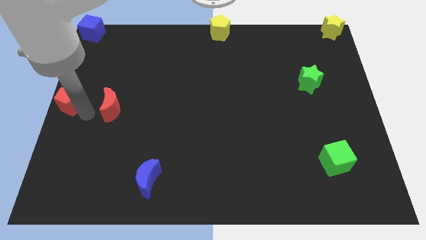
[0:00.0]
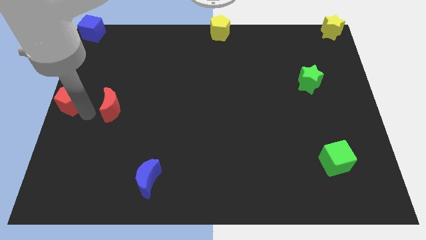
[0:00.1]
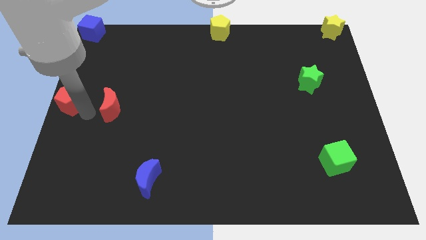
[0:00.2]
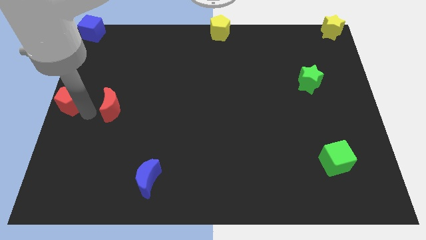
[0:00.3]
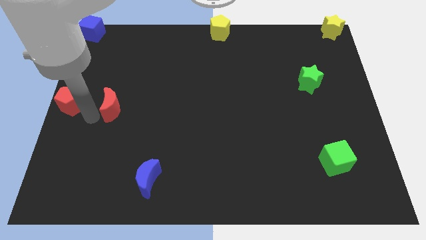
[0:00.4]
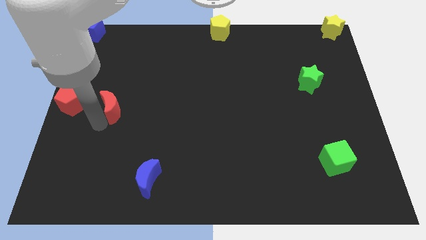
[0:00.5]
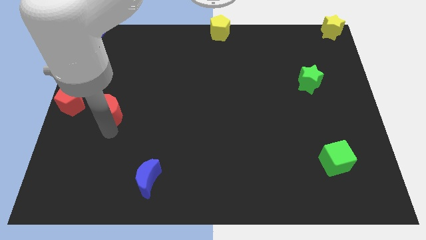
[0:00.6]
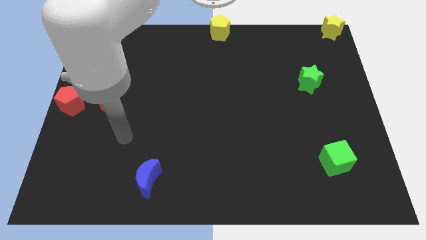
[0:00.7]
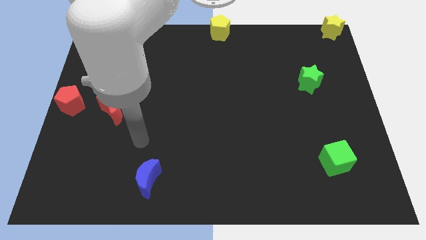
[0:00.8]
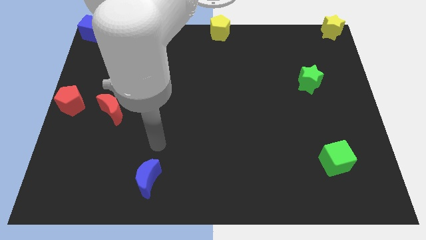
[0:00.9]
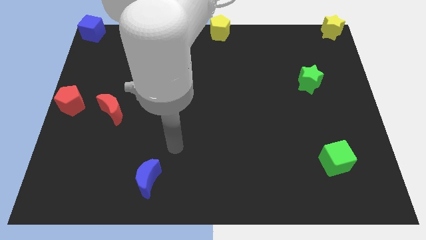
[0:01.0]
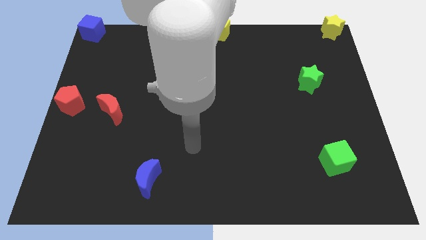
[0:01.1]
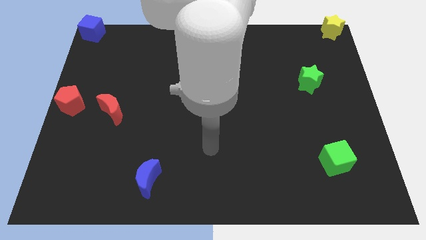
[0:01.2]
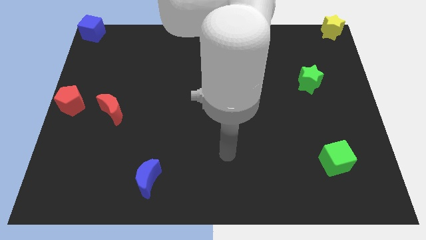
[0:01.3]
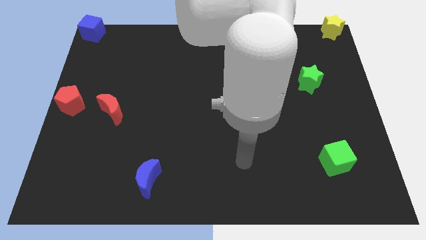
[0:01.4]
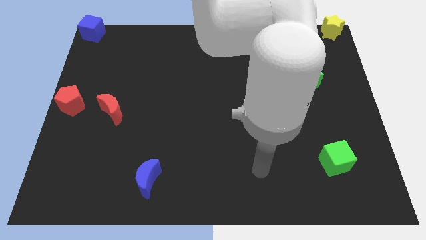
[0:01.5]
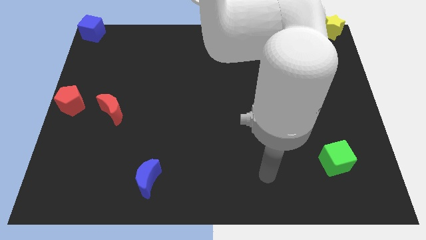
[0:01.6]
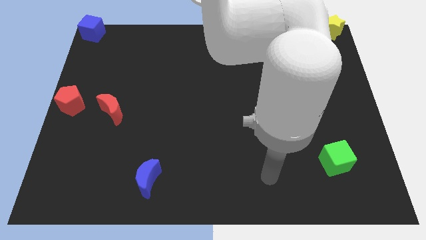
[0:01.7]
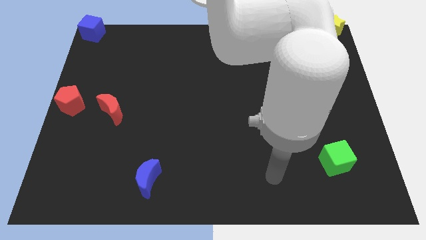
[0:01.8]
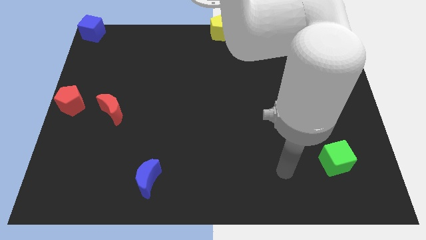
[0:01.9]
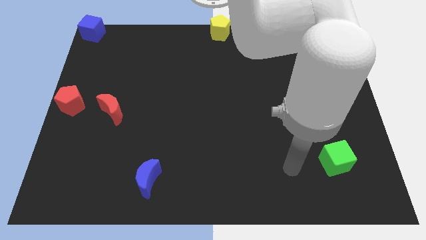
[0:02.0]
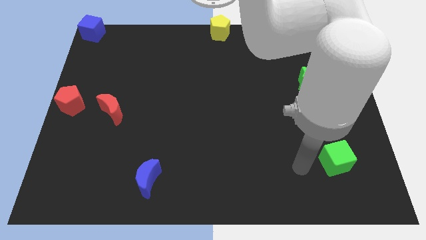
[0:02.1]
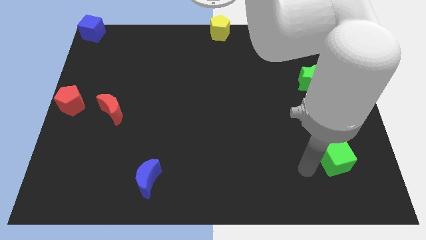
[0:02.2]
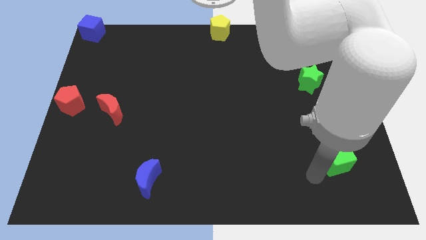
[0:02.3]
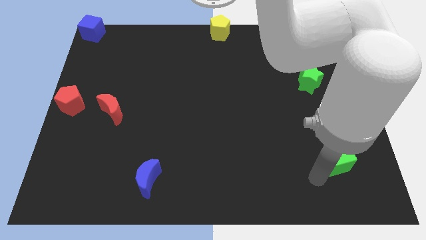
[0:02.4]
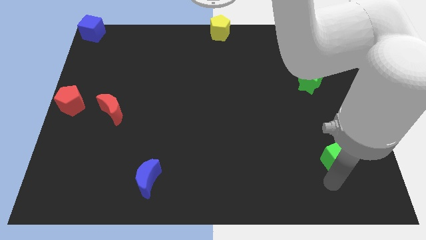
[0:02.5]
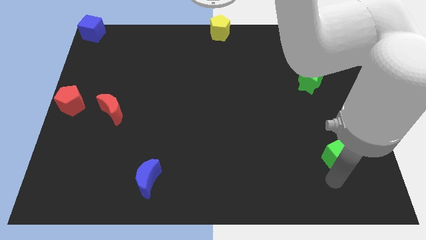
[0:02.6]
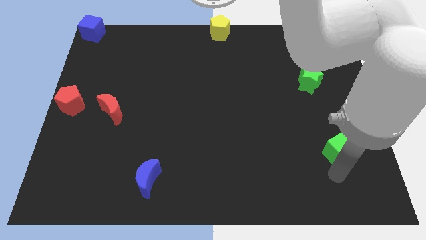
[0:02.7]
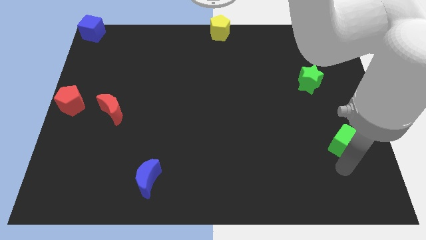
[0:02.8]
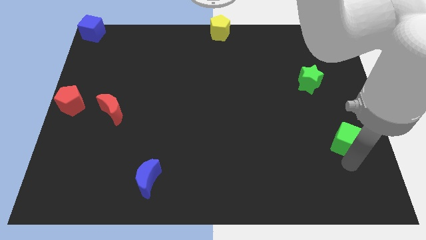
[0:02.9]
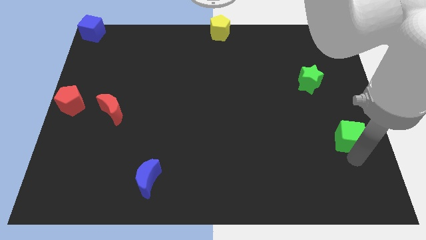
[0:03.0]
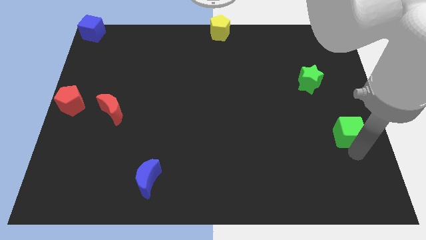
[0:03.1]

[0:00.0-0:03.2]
go near green cube

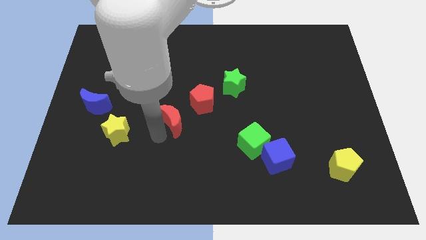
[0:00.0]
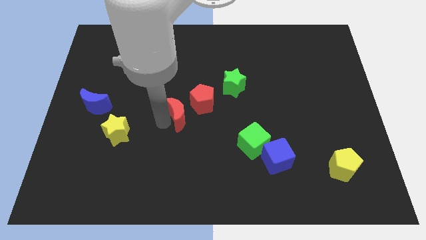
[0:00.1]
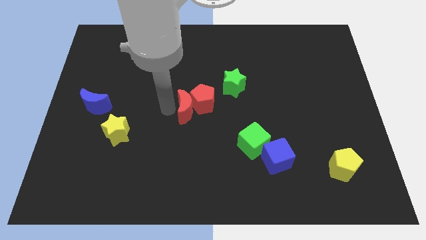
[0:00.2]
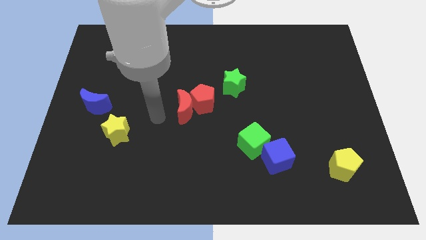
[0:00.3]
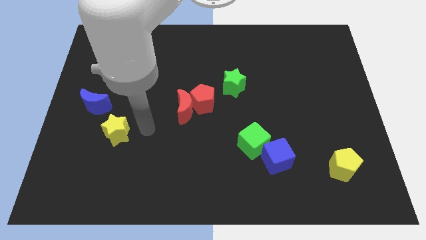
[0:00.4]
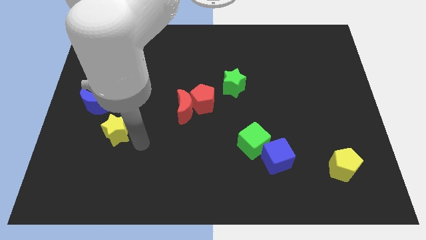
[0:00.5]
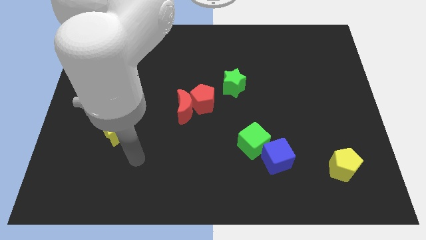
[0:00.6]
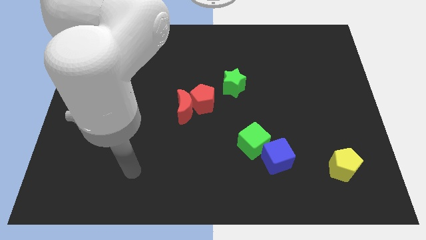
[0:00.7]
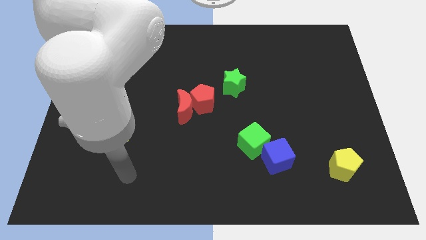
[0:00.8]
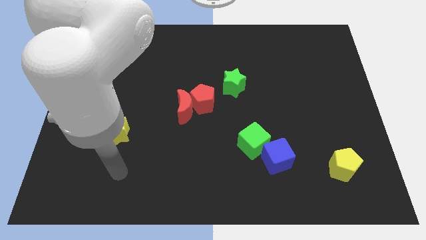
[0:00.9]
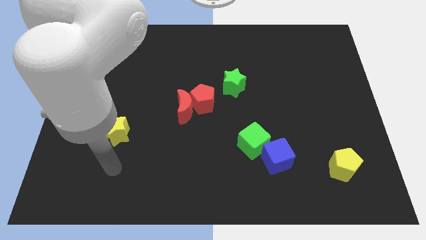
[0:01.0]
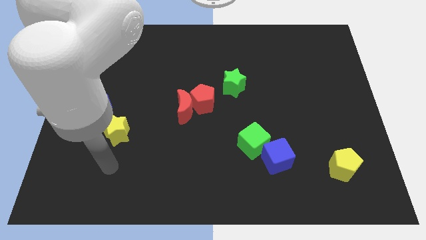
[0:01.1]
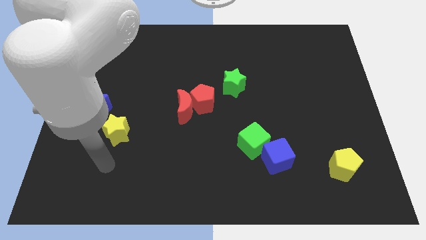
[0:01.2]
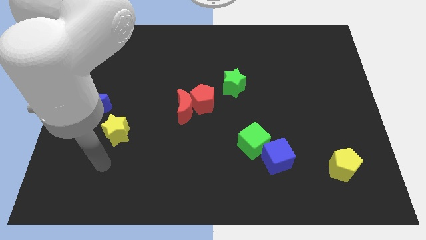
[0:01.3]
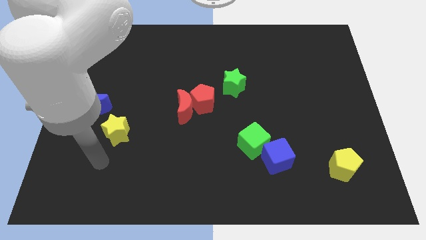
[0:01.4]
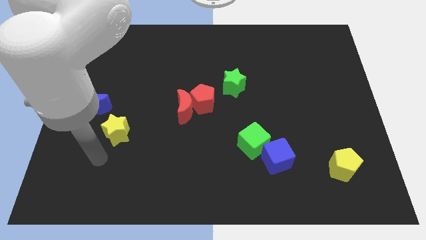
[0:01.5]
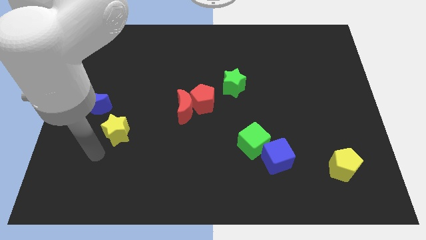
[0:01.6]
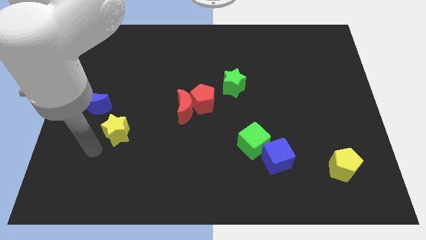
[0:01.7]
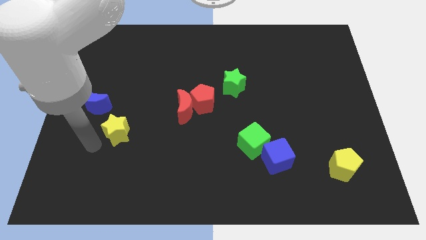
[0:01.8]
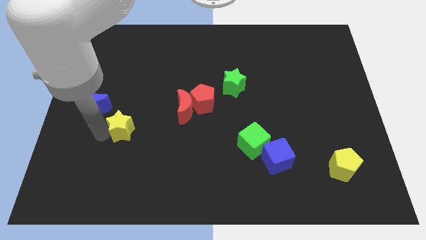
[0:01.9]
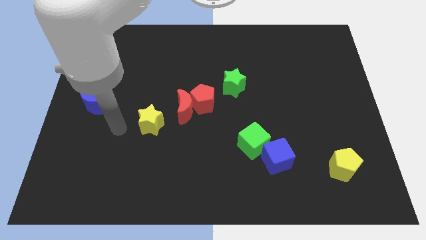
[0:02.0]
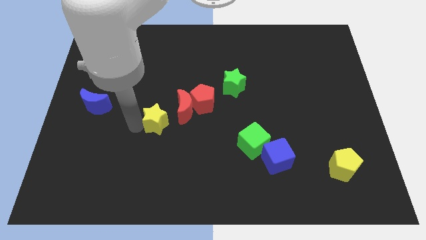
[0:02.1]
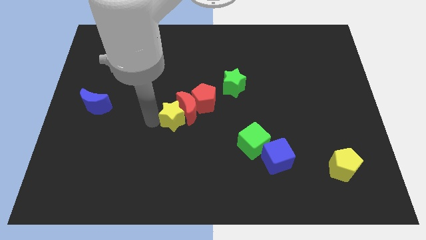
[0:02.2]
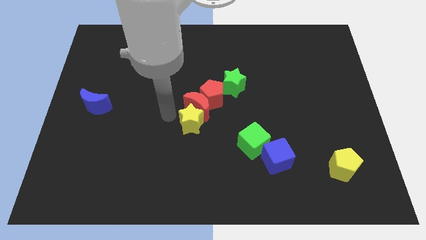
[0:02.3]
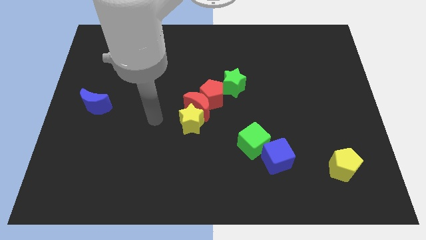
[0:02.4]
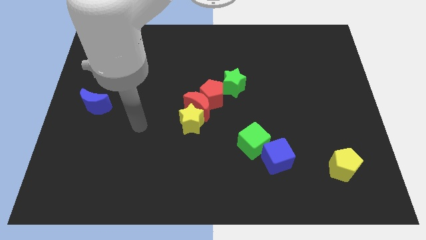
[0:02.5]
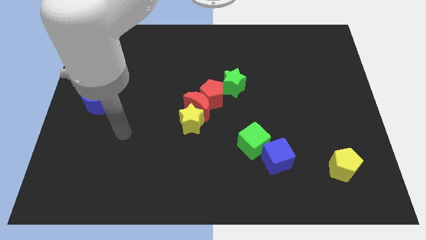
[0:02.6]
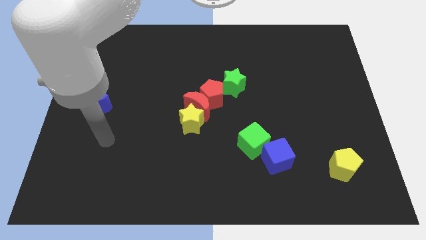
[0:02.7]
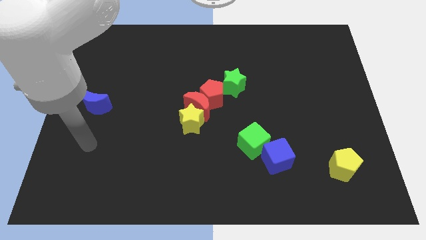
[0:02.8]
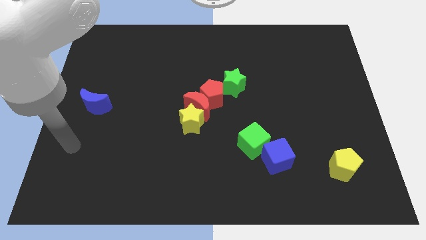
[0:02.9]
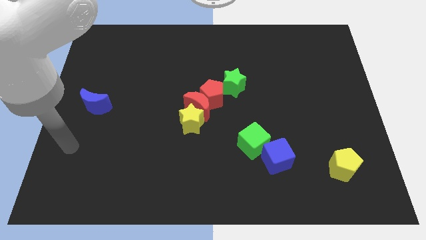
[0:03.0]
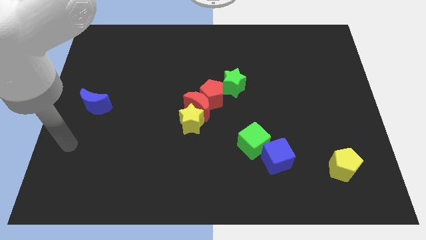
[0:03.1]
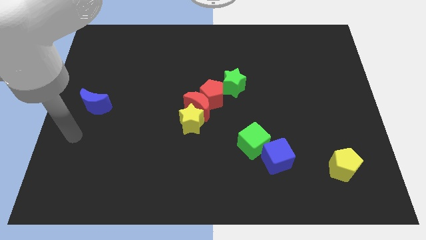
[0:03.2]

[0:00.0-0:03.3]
push the red moon and yellow star in to the red pentagon

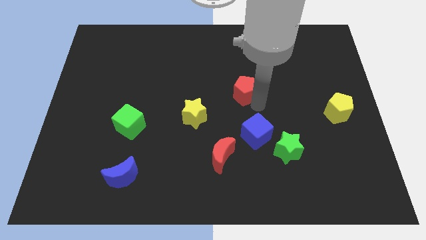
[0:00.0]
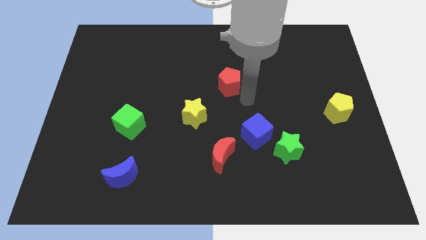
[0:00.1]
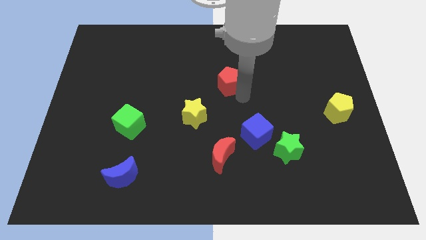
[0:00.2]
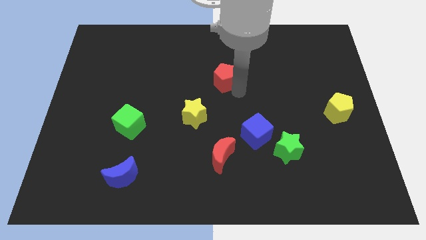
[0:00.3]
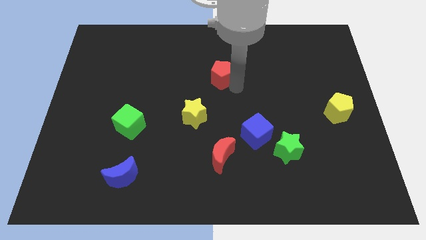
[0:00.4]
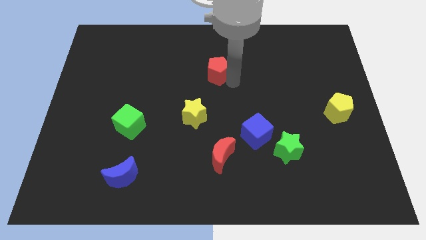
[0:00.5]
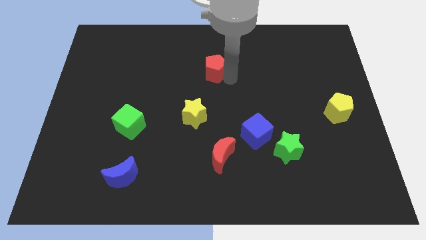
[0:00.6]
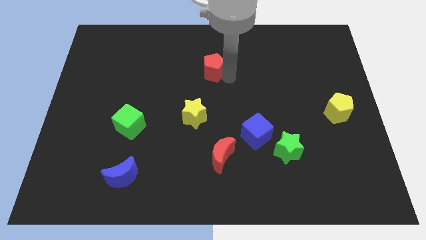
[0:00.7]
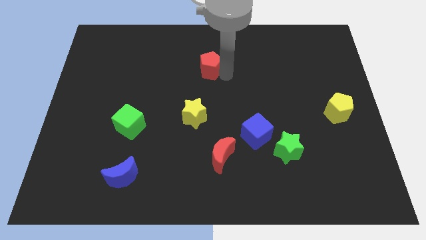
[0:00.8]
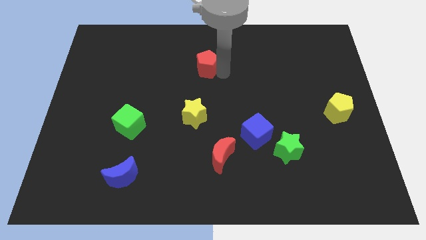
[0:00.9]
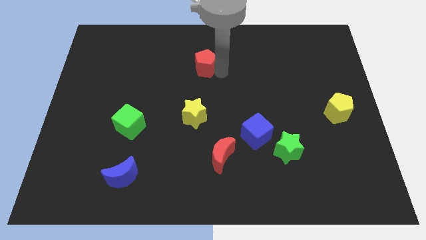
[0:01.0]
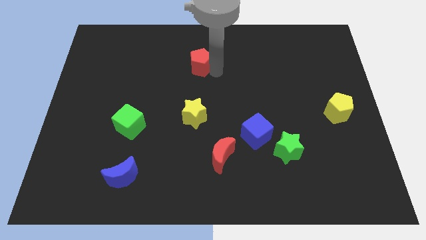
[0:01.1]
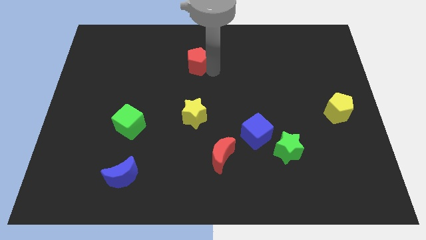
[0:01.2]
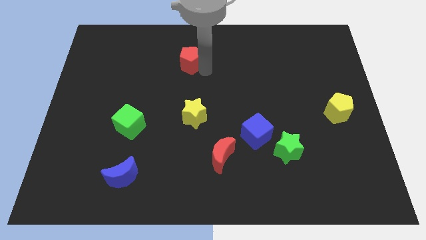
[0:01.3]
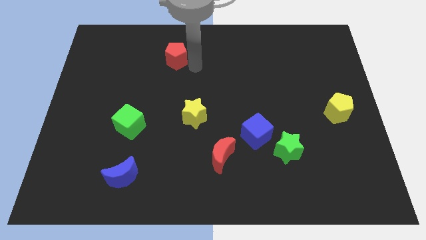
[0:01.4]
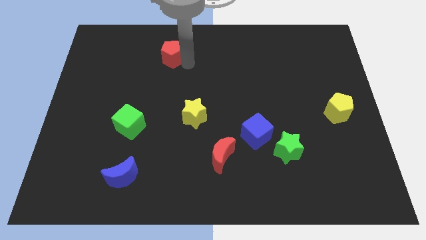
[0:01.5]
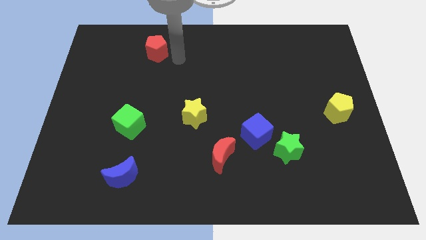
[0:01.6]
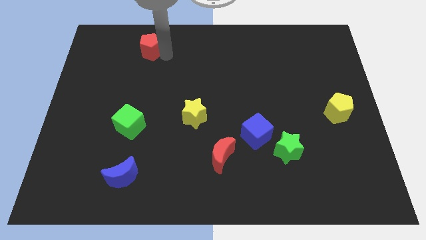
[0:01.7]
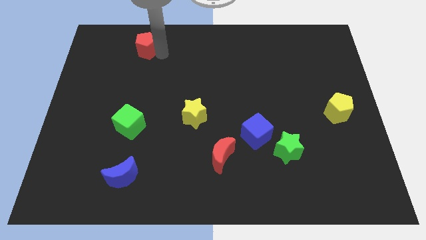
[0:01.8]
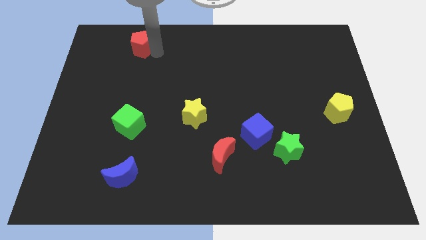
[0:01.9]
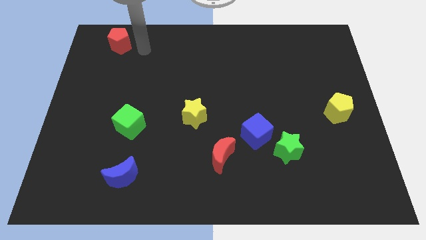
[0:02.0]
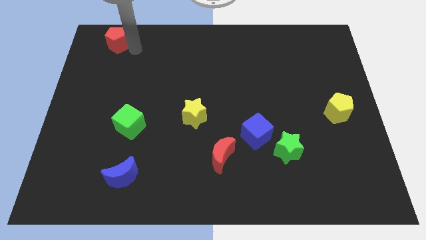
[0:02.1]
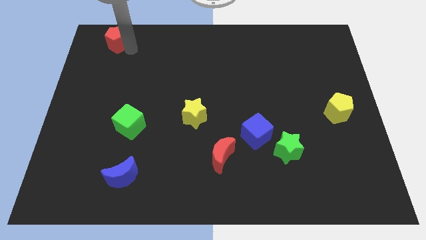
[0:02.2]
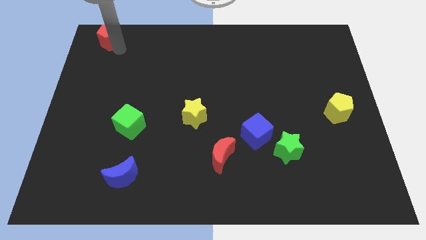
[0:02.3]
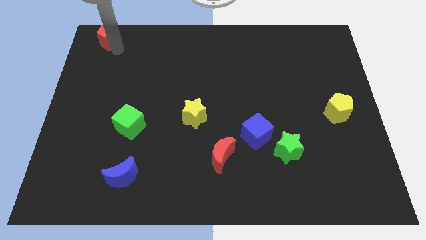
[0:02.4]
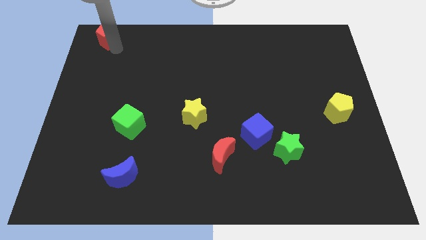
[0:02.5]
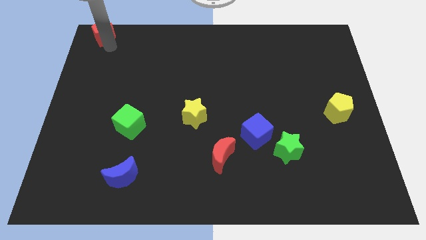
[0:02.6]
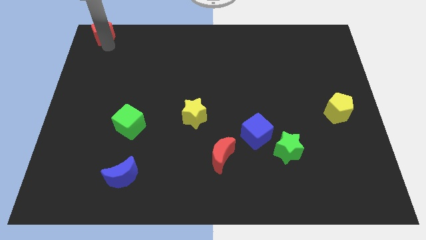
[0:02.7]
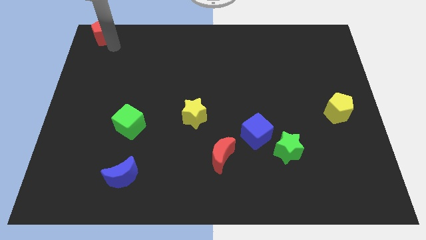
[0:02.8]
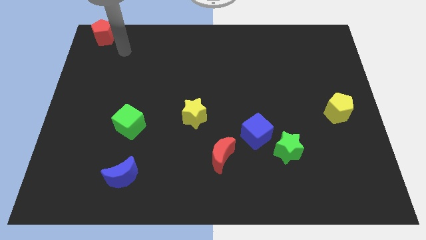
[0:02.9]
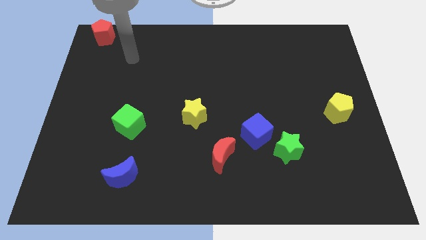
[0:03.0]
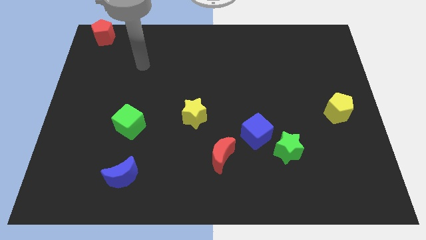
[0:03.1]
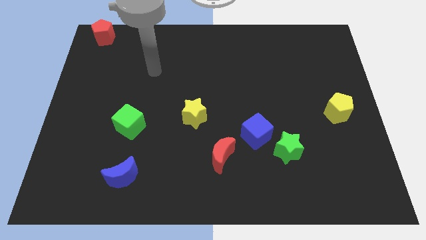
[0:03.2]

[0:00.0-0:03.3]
push the red pentagon to the top left corner
